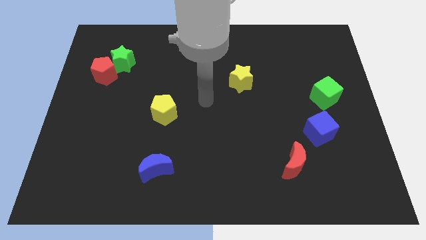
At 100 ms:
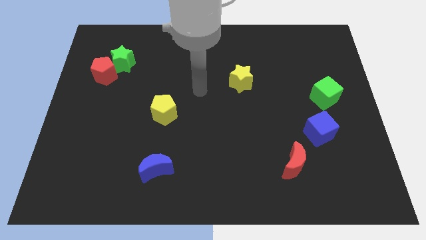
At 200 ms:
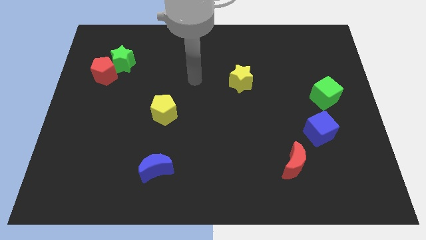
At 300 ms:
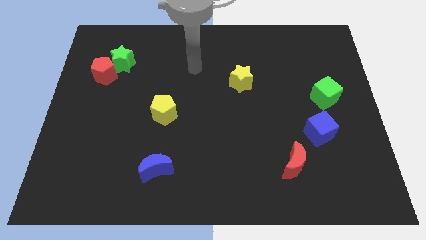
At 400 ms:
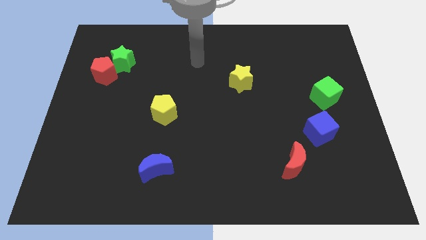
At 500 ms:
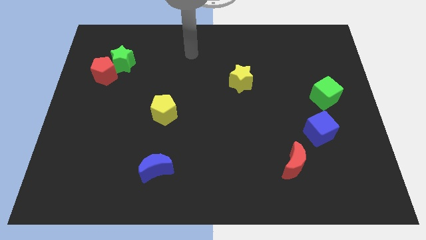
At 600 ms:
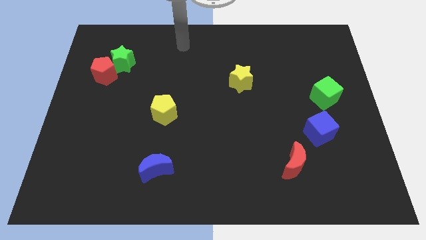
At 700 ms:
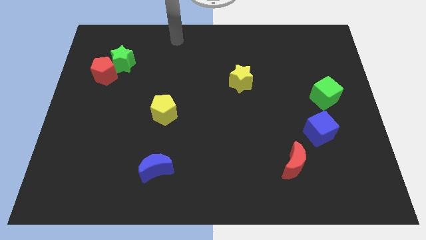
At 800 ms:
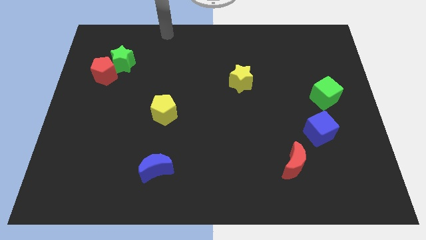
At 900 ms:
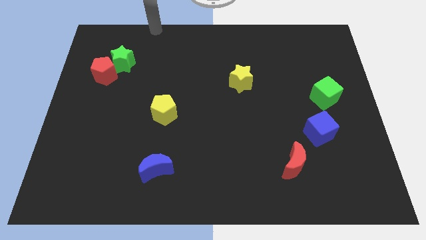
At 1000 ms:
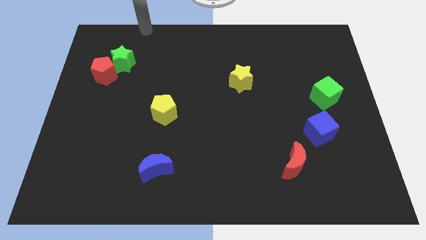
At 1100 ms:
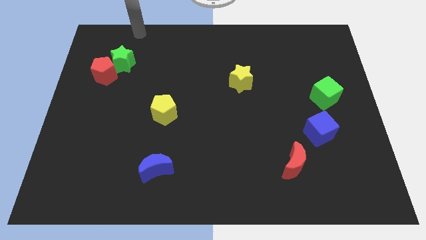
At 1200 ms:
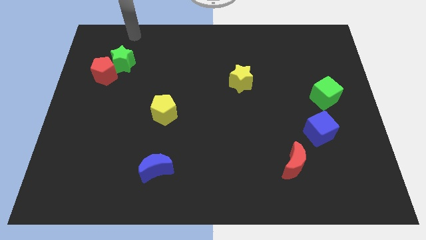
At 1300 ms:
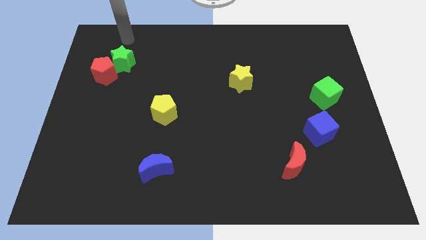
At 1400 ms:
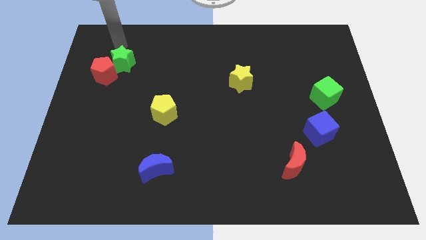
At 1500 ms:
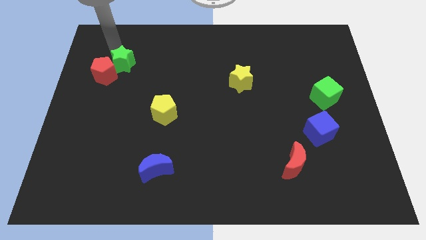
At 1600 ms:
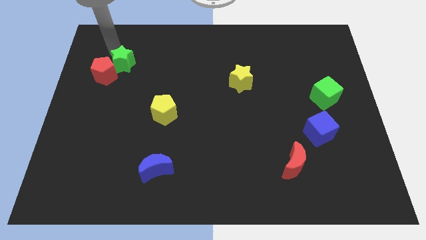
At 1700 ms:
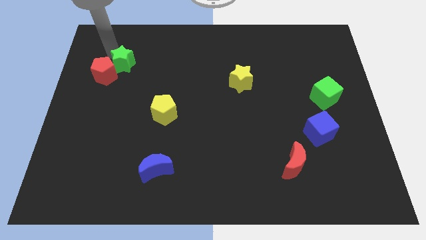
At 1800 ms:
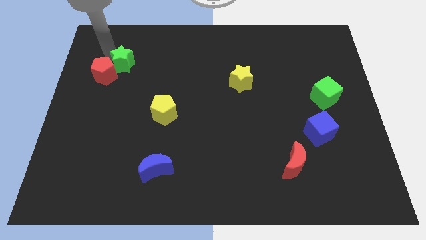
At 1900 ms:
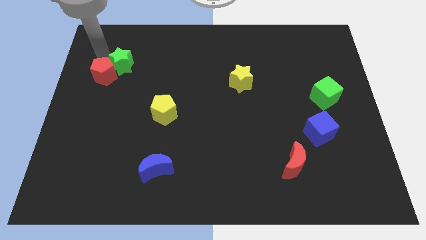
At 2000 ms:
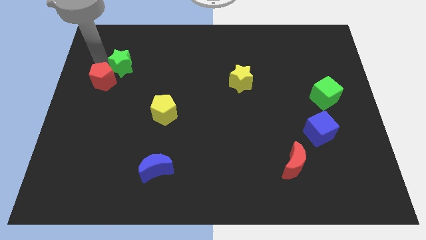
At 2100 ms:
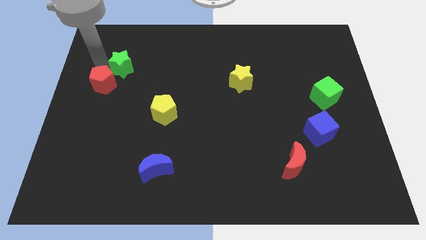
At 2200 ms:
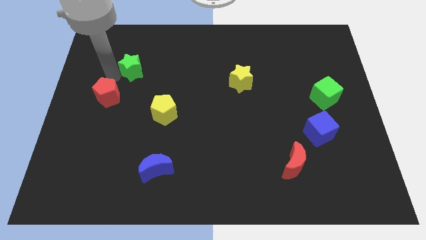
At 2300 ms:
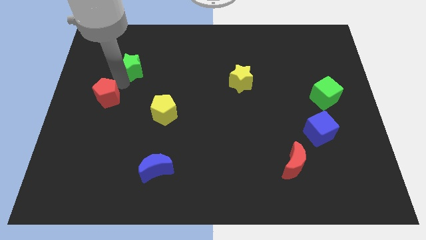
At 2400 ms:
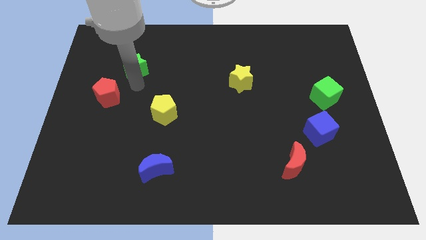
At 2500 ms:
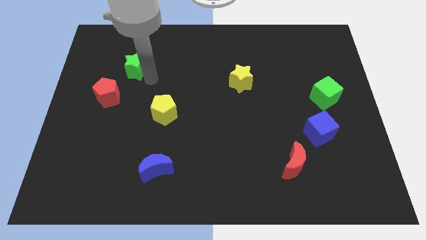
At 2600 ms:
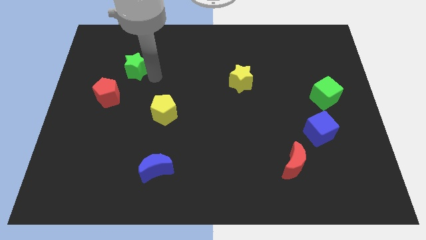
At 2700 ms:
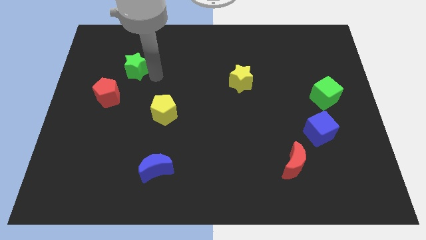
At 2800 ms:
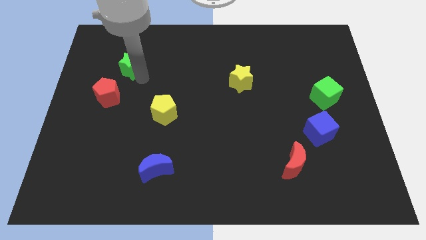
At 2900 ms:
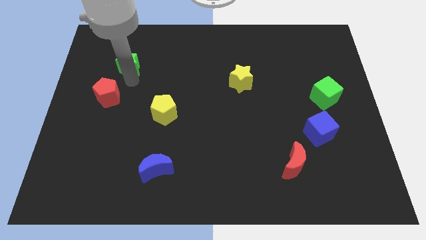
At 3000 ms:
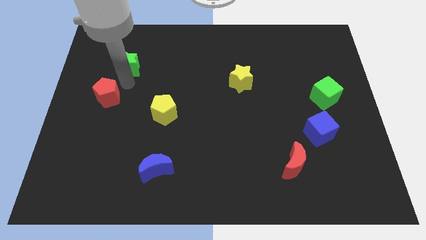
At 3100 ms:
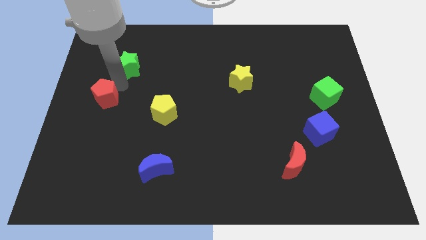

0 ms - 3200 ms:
separate the red pentagon and green star

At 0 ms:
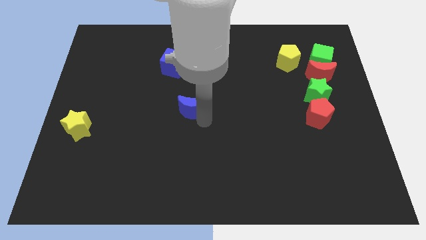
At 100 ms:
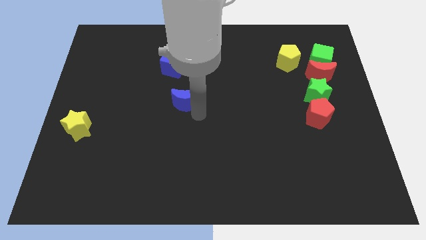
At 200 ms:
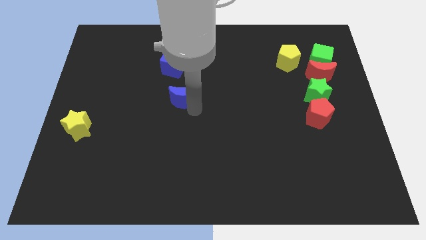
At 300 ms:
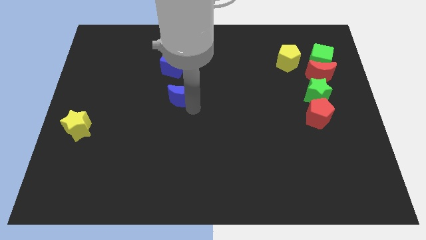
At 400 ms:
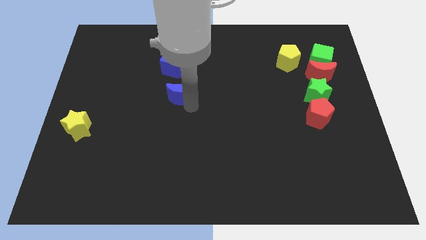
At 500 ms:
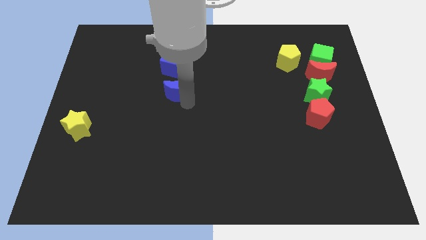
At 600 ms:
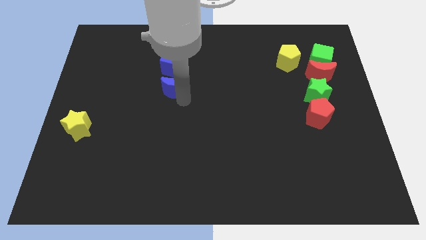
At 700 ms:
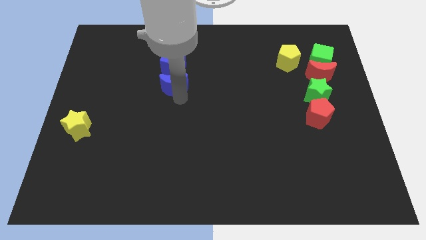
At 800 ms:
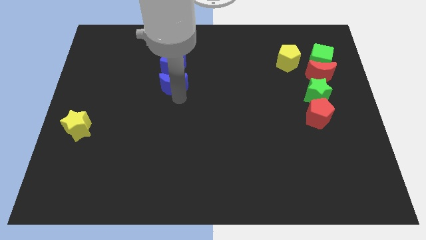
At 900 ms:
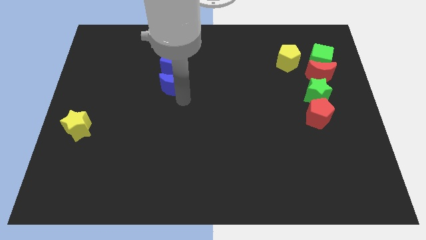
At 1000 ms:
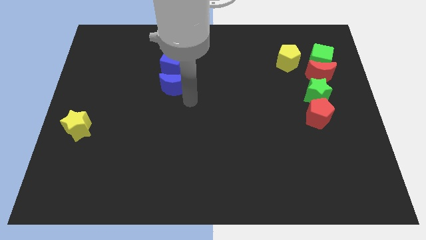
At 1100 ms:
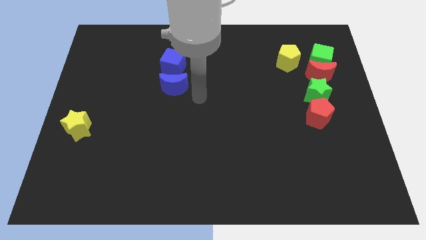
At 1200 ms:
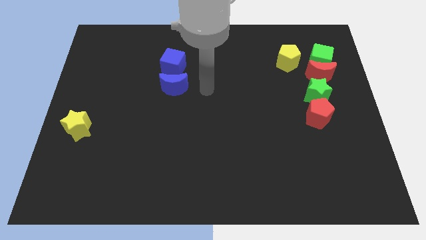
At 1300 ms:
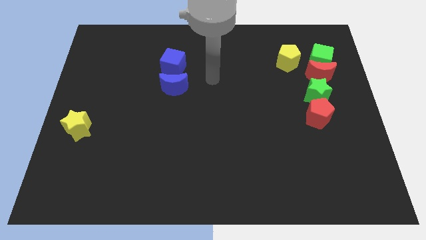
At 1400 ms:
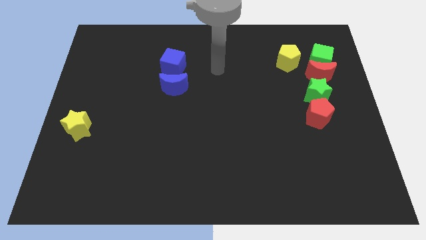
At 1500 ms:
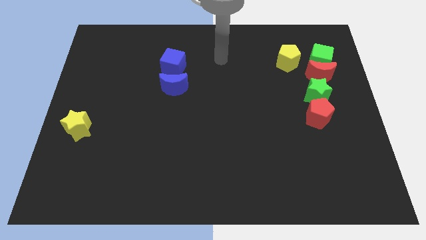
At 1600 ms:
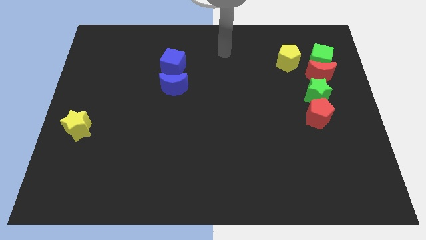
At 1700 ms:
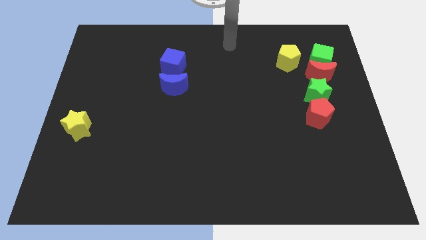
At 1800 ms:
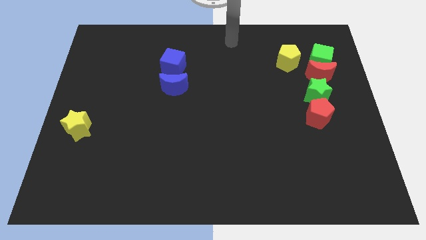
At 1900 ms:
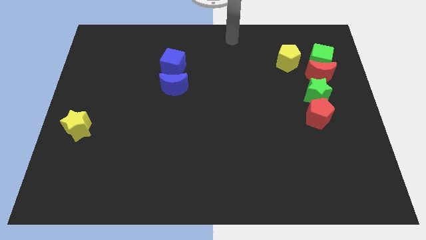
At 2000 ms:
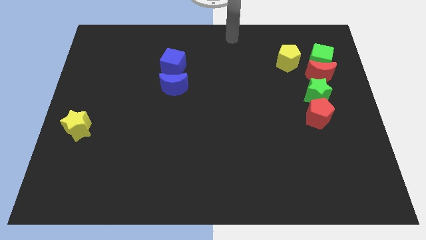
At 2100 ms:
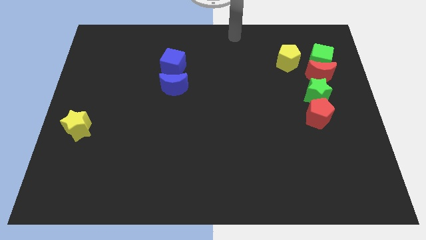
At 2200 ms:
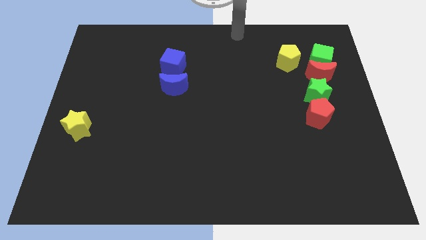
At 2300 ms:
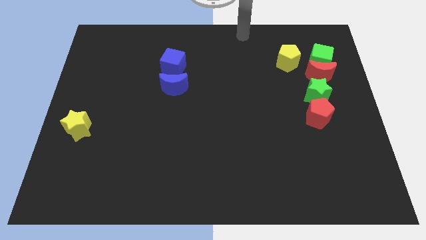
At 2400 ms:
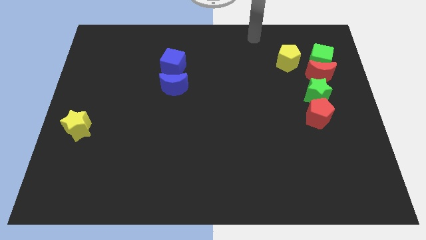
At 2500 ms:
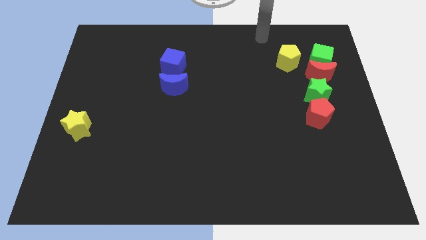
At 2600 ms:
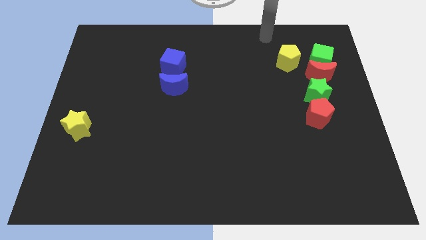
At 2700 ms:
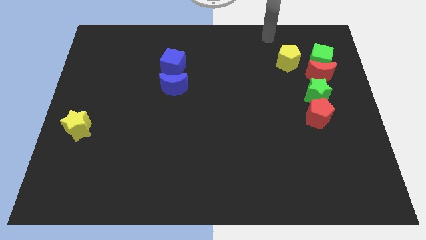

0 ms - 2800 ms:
push blue moon close to the blue cube

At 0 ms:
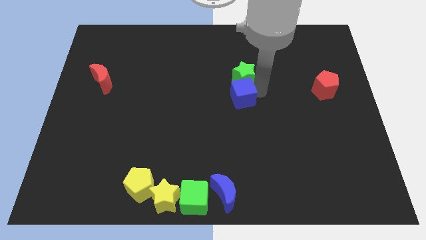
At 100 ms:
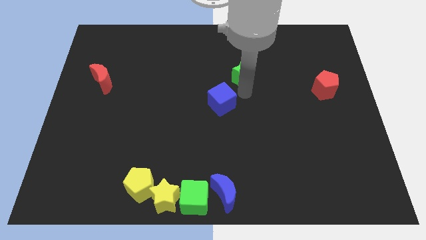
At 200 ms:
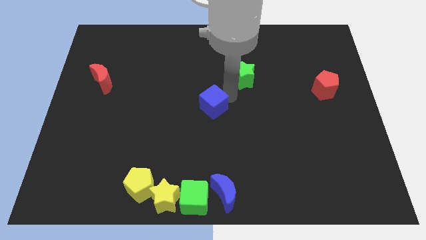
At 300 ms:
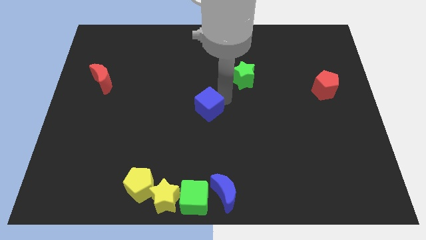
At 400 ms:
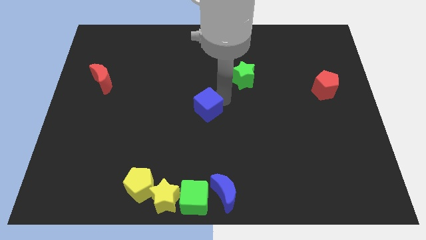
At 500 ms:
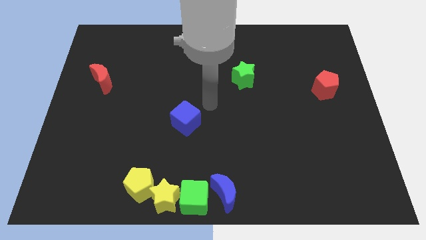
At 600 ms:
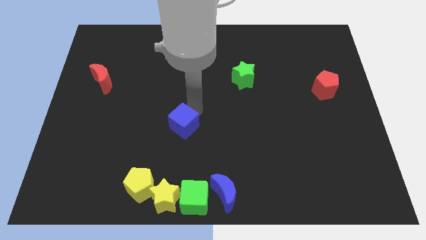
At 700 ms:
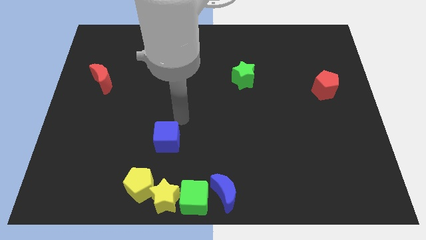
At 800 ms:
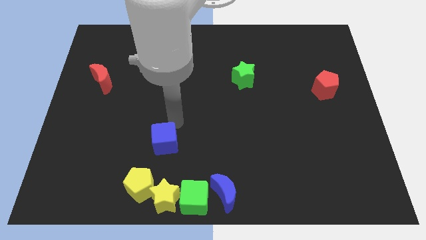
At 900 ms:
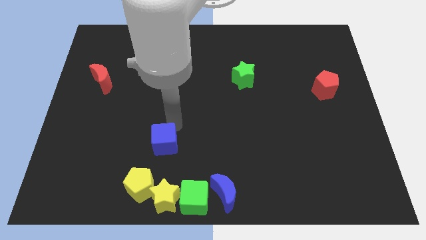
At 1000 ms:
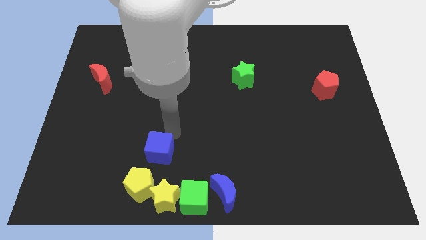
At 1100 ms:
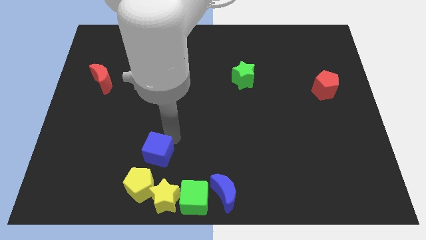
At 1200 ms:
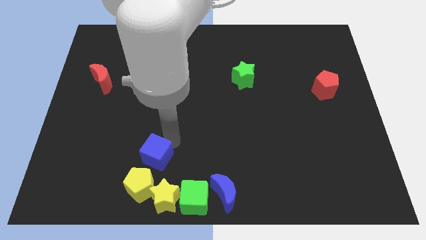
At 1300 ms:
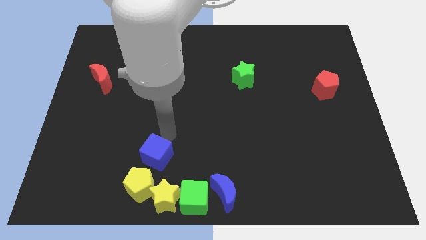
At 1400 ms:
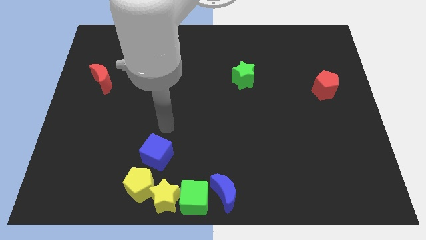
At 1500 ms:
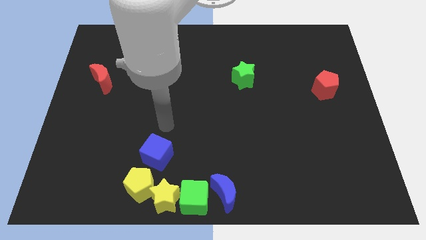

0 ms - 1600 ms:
separate the blue cube from the green star

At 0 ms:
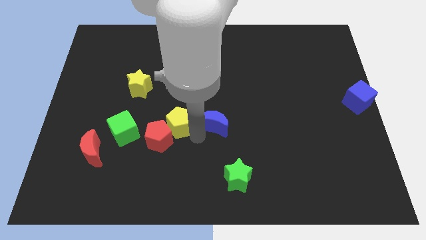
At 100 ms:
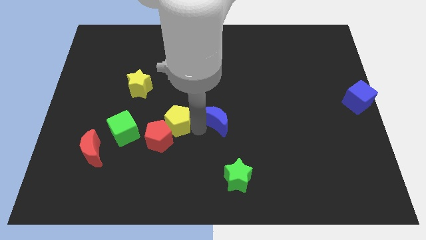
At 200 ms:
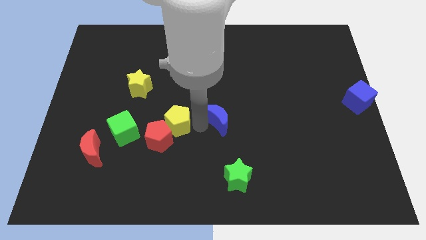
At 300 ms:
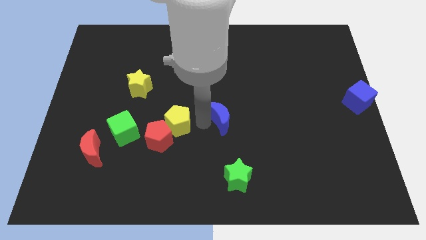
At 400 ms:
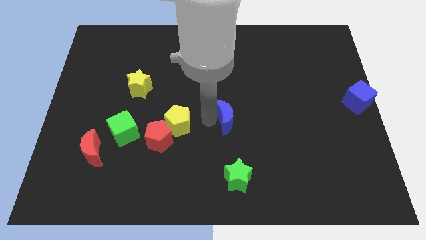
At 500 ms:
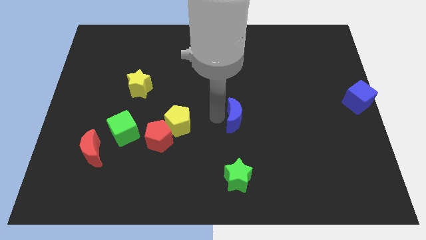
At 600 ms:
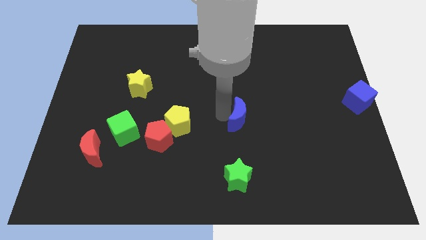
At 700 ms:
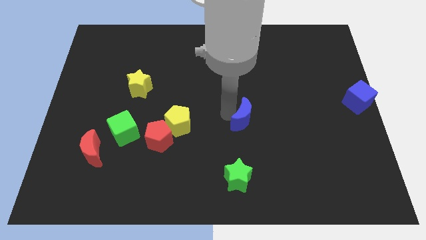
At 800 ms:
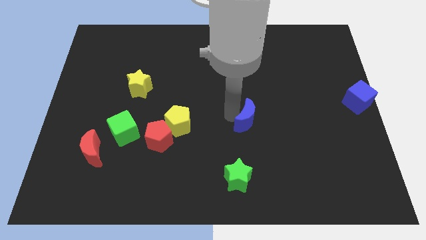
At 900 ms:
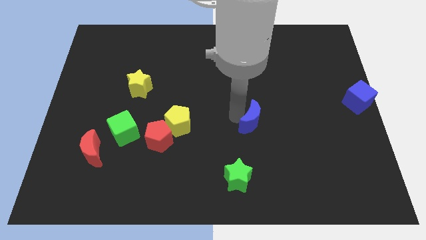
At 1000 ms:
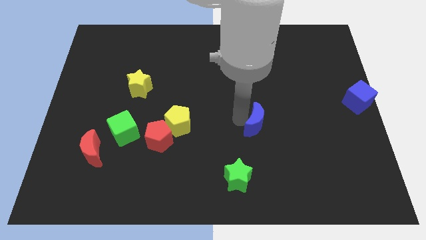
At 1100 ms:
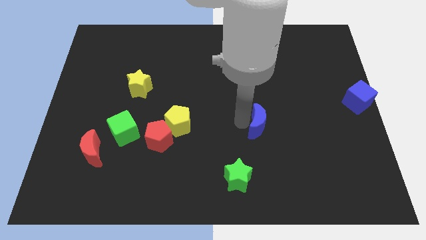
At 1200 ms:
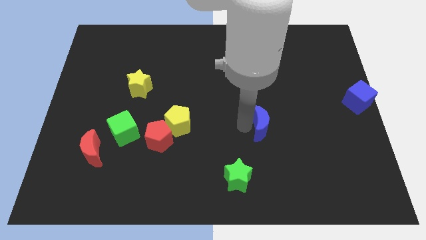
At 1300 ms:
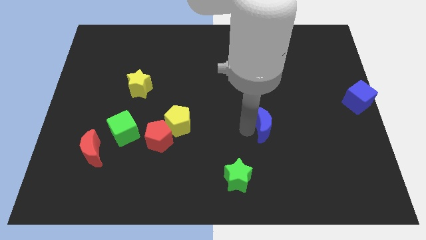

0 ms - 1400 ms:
separate the blue moon from the yellow pentagon
